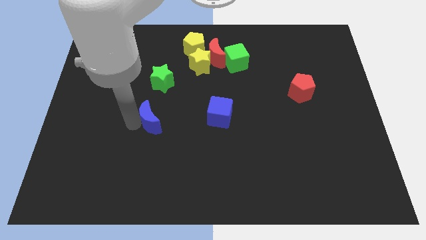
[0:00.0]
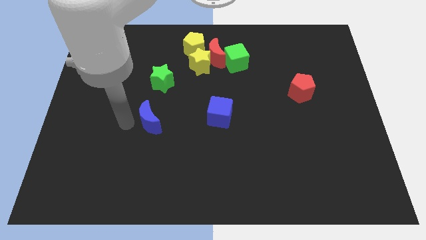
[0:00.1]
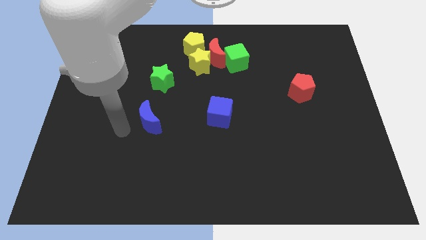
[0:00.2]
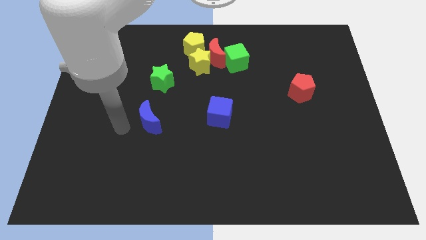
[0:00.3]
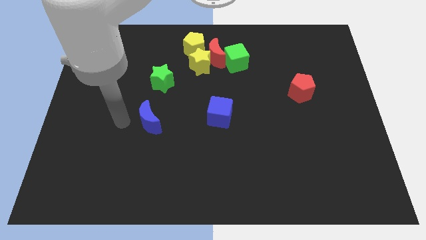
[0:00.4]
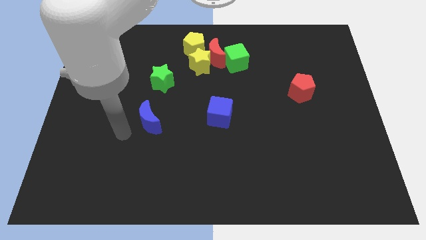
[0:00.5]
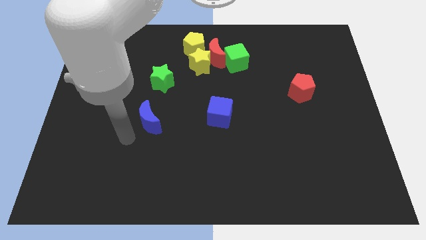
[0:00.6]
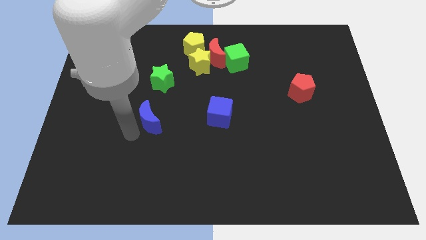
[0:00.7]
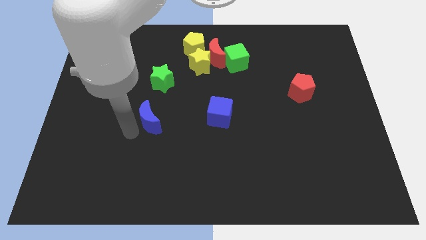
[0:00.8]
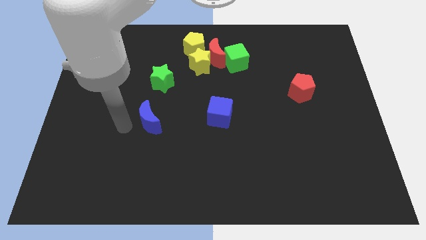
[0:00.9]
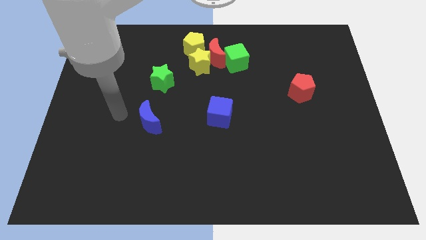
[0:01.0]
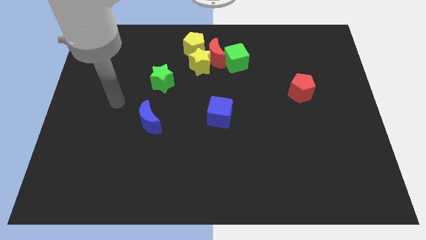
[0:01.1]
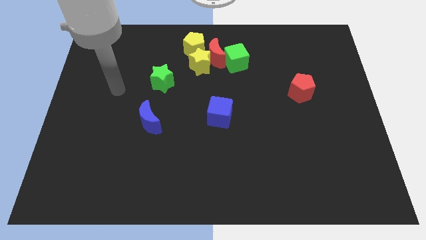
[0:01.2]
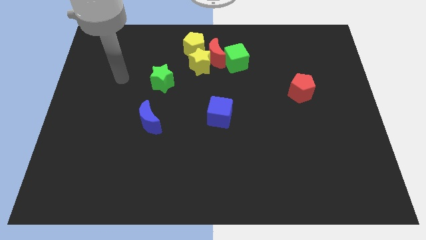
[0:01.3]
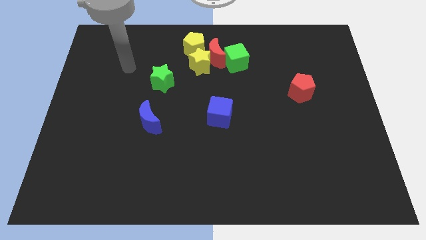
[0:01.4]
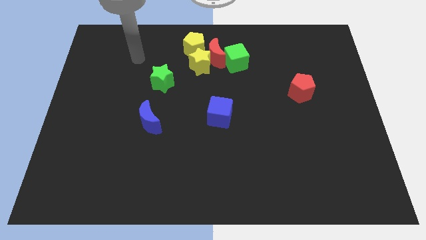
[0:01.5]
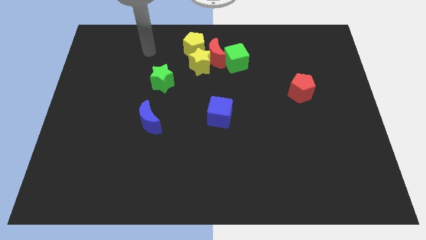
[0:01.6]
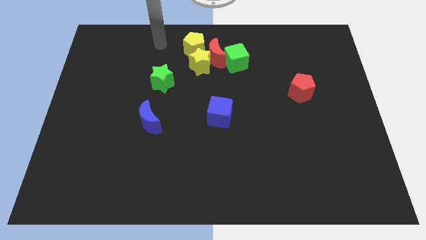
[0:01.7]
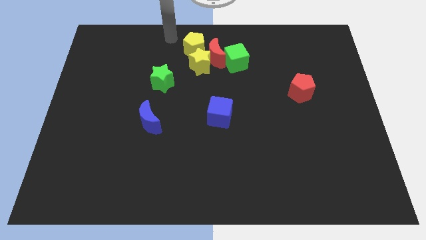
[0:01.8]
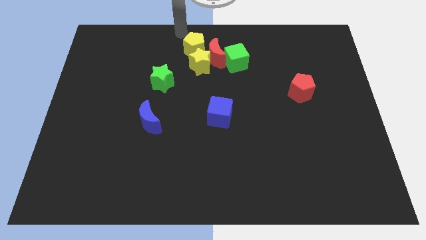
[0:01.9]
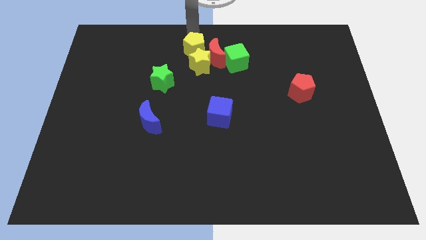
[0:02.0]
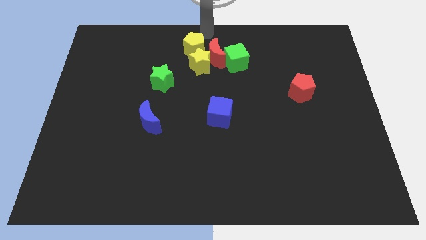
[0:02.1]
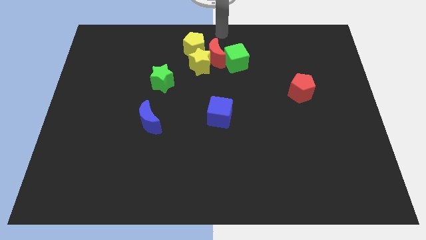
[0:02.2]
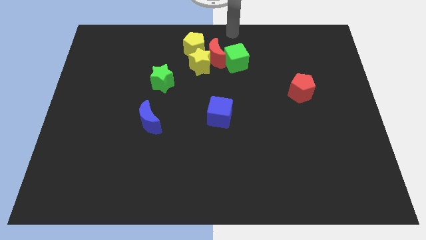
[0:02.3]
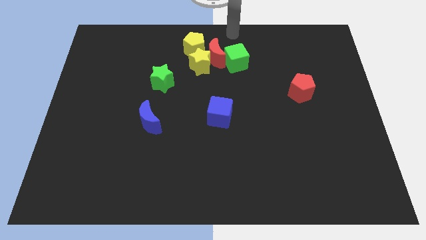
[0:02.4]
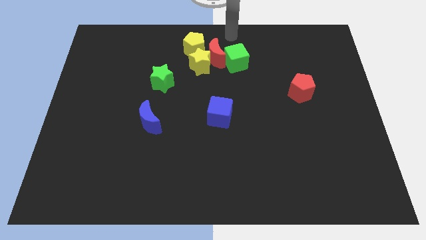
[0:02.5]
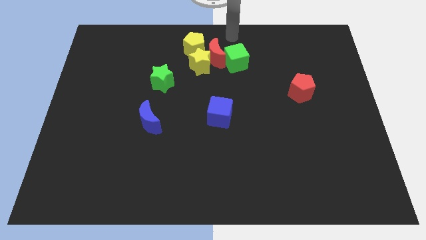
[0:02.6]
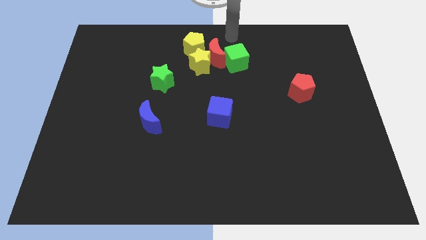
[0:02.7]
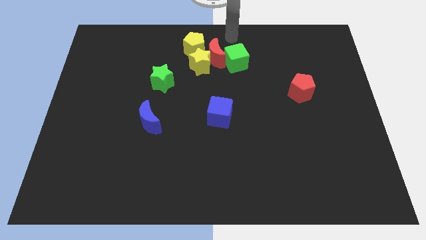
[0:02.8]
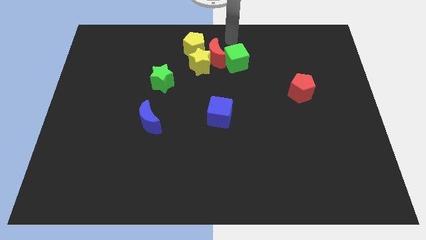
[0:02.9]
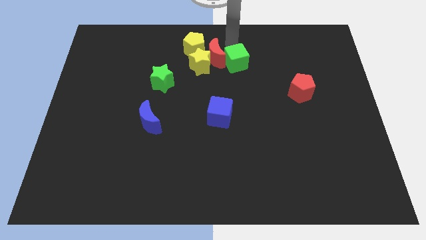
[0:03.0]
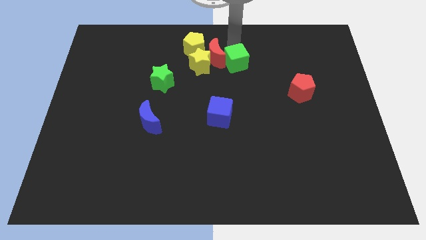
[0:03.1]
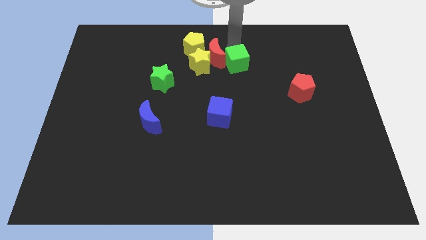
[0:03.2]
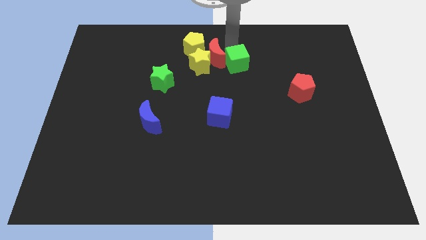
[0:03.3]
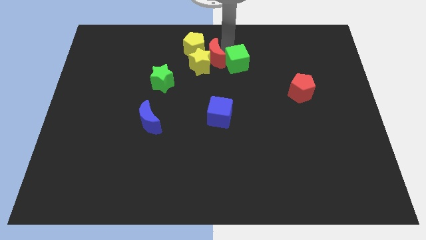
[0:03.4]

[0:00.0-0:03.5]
tap the green cube at the top

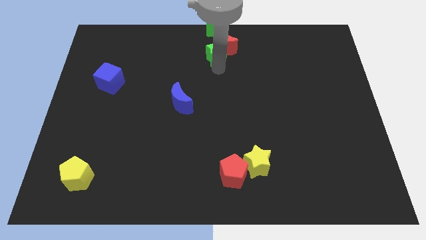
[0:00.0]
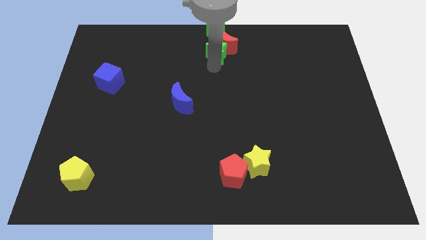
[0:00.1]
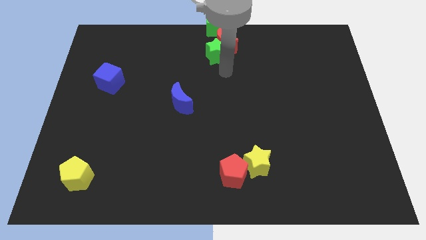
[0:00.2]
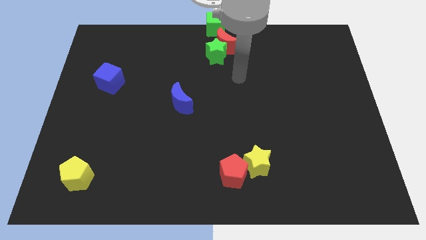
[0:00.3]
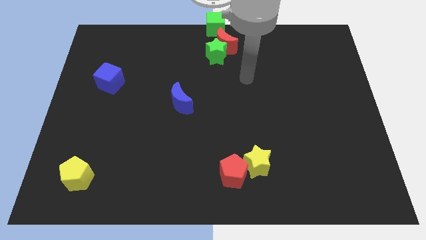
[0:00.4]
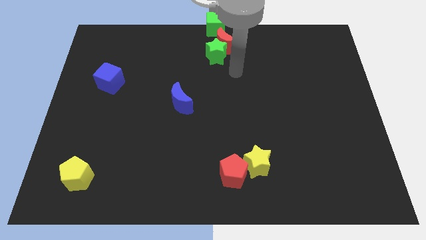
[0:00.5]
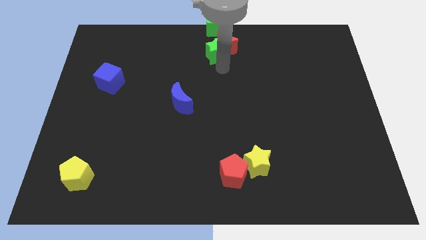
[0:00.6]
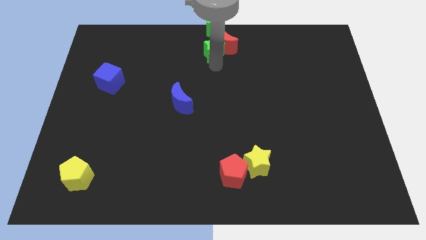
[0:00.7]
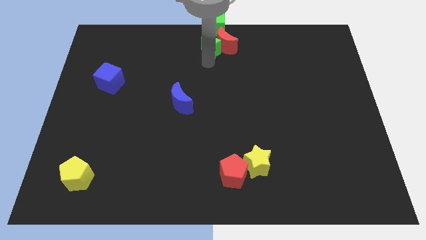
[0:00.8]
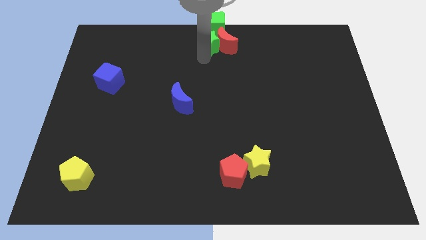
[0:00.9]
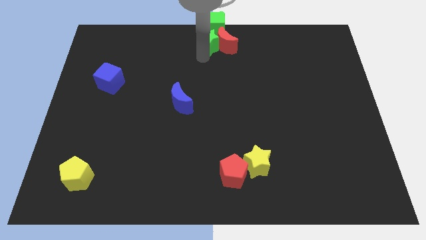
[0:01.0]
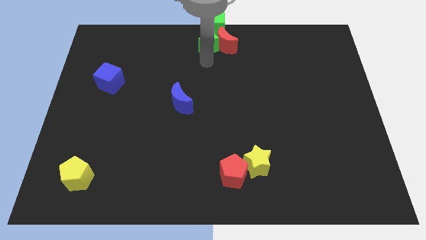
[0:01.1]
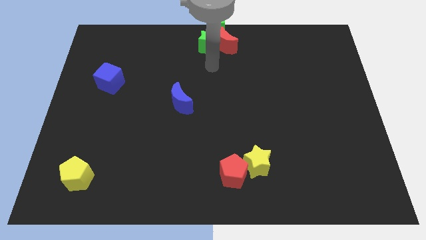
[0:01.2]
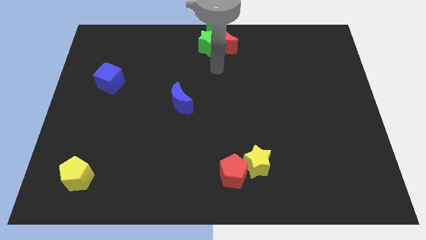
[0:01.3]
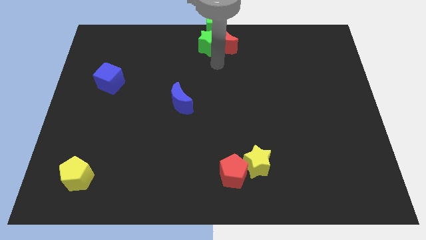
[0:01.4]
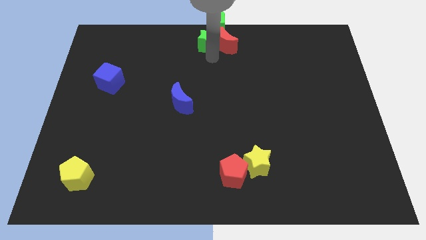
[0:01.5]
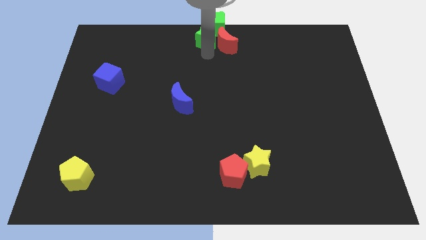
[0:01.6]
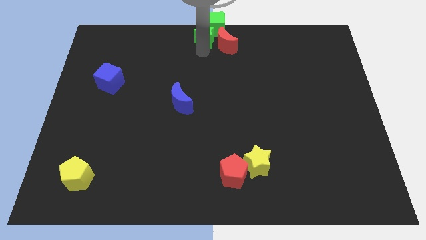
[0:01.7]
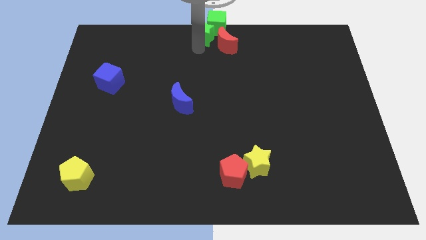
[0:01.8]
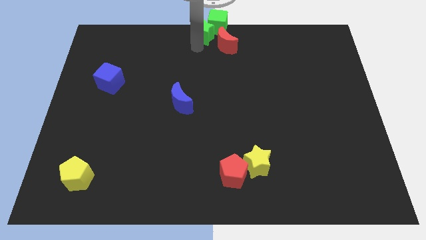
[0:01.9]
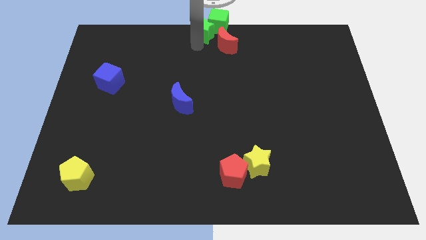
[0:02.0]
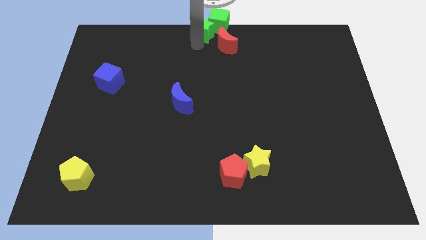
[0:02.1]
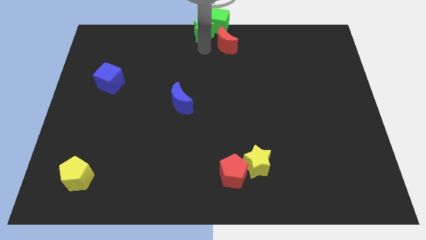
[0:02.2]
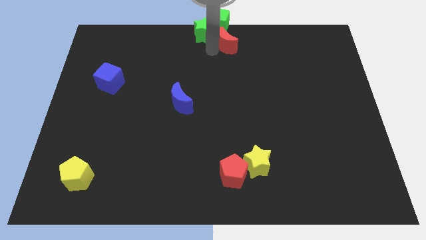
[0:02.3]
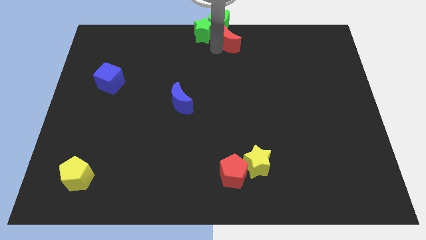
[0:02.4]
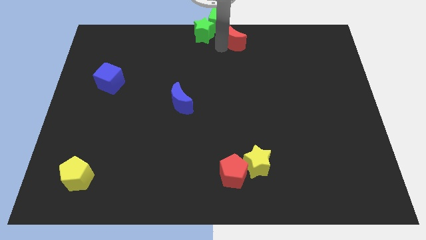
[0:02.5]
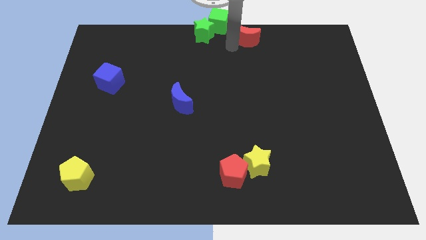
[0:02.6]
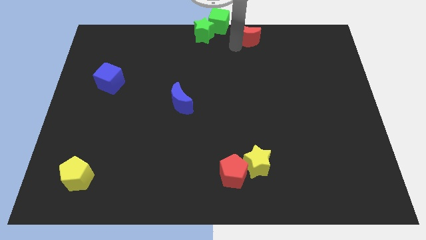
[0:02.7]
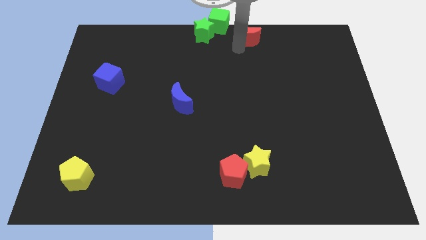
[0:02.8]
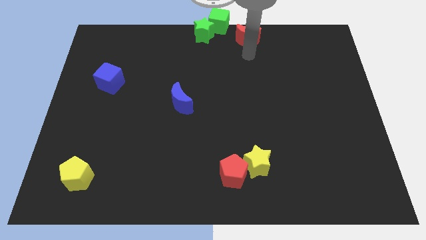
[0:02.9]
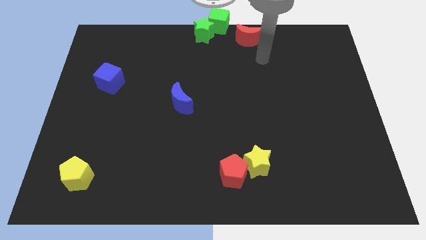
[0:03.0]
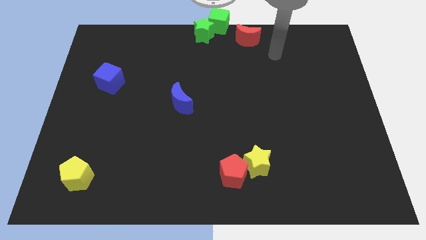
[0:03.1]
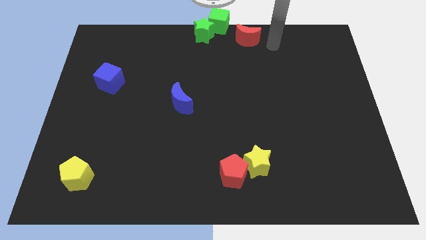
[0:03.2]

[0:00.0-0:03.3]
put the green blocks together

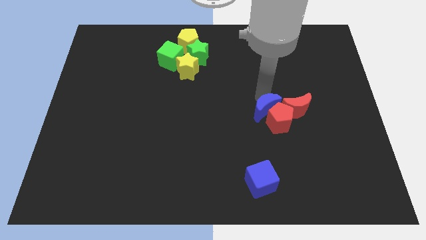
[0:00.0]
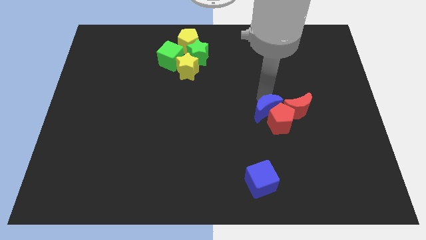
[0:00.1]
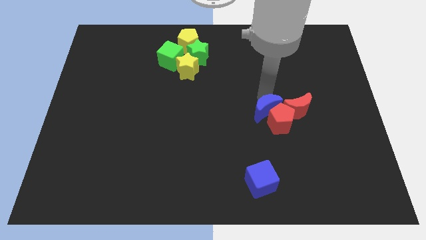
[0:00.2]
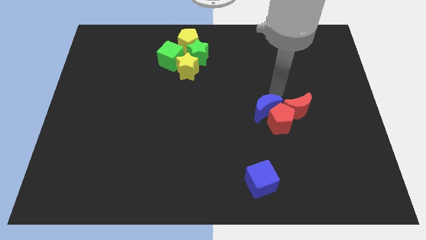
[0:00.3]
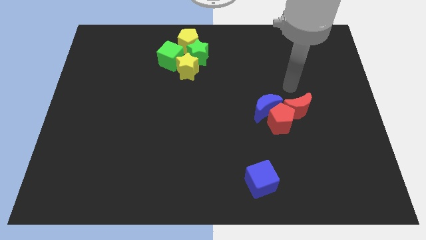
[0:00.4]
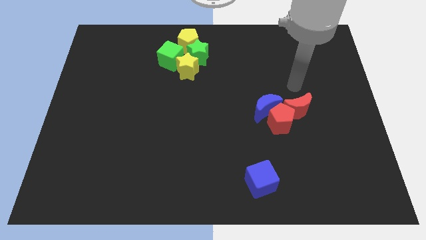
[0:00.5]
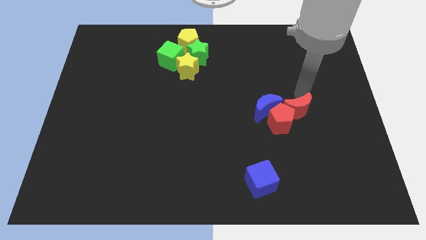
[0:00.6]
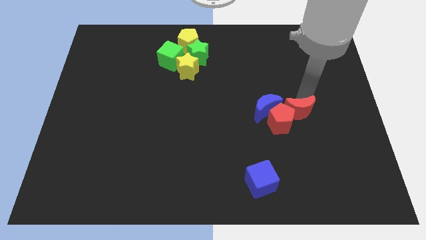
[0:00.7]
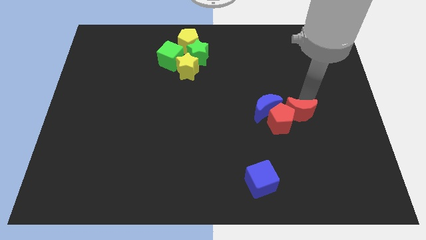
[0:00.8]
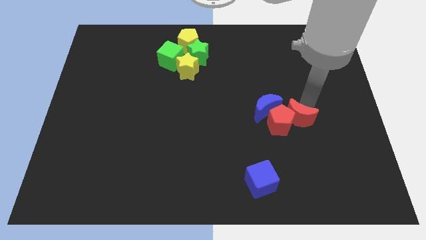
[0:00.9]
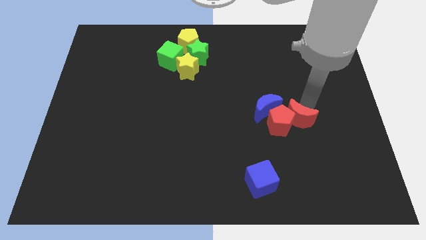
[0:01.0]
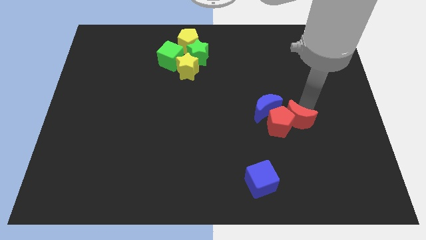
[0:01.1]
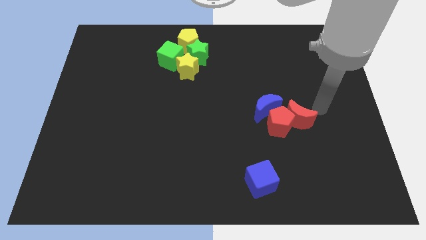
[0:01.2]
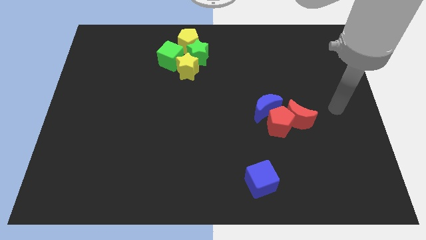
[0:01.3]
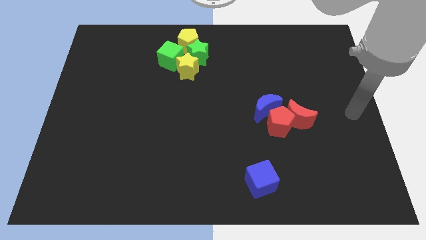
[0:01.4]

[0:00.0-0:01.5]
tap red moon slightly

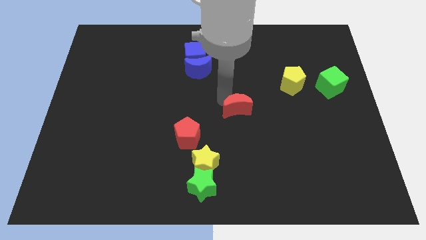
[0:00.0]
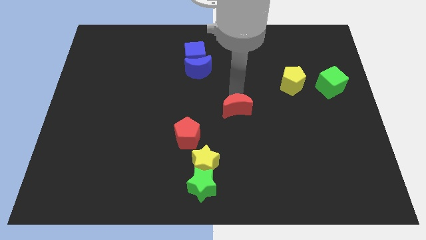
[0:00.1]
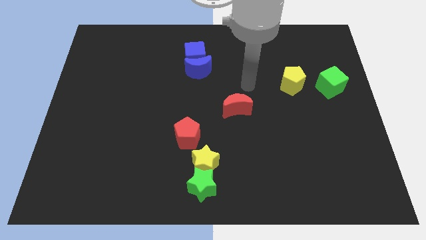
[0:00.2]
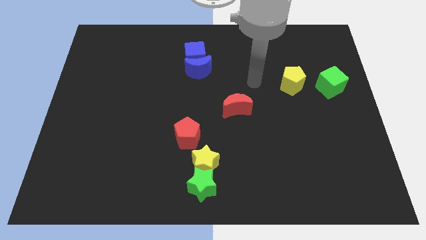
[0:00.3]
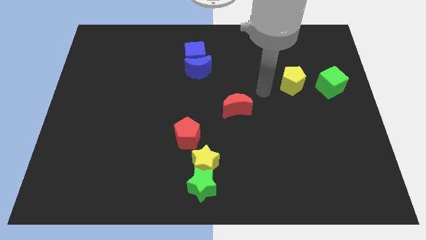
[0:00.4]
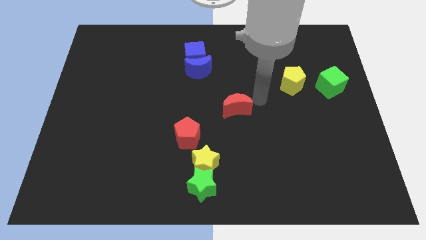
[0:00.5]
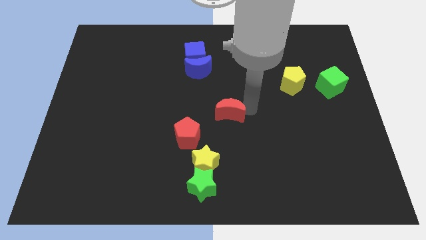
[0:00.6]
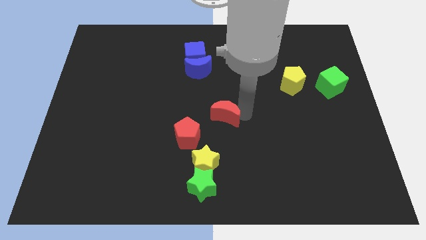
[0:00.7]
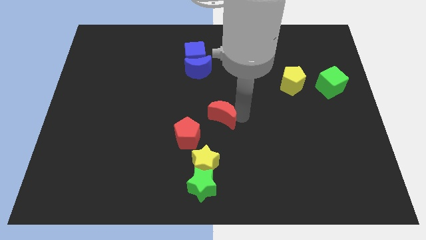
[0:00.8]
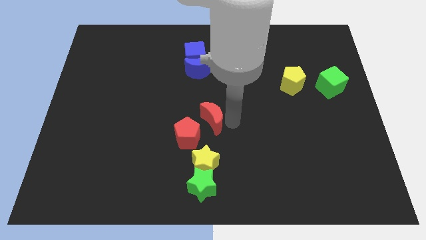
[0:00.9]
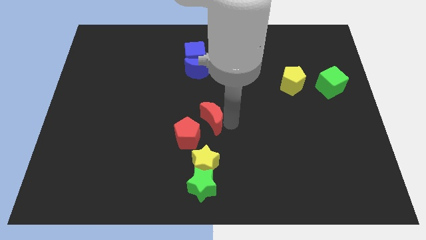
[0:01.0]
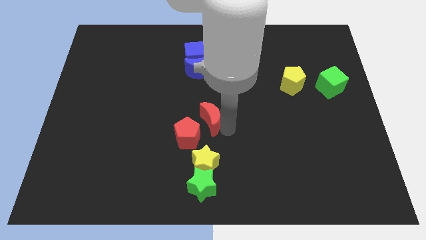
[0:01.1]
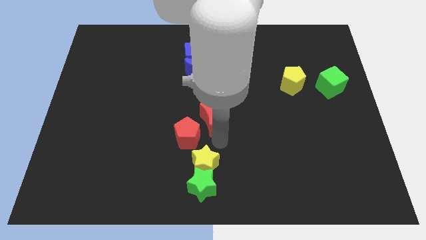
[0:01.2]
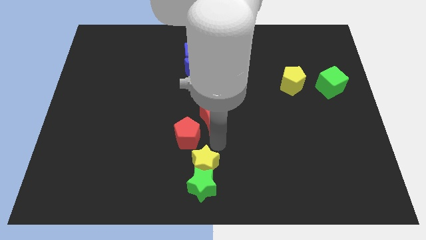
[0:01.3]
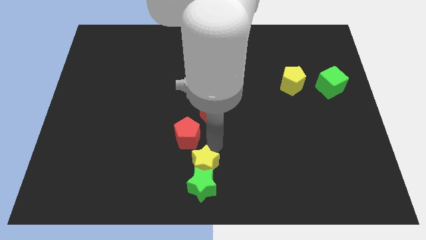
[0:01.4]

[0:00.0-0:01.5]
place the red moon diagonally top right red pentagon
